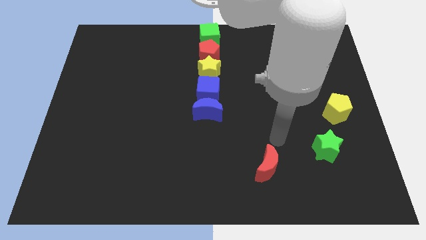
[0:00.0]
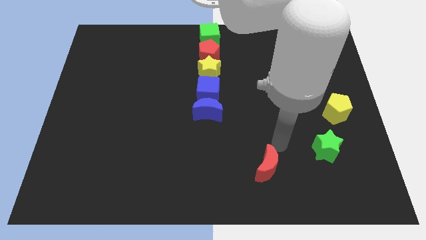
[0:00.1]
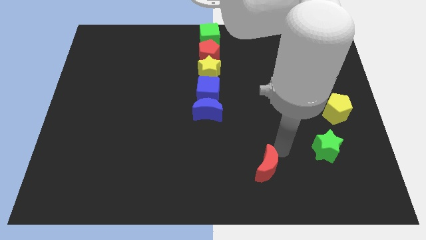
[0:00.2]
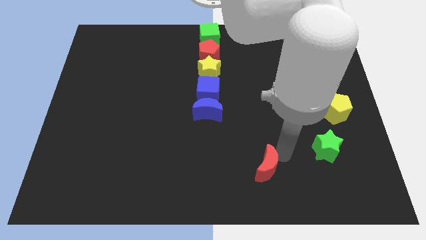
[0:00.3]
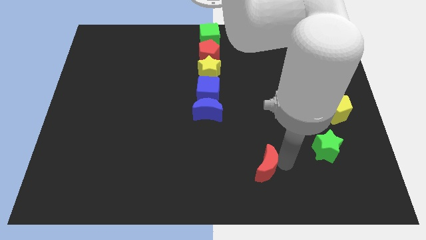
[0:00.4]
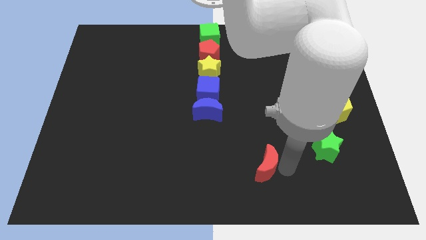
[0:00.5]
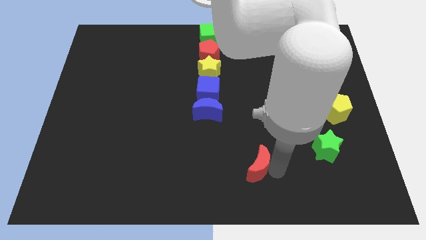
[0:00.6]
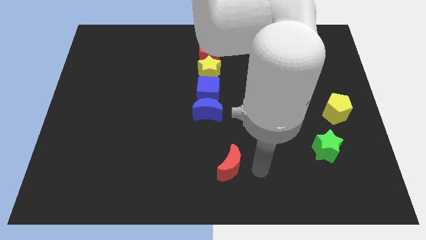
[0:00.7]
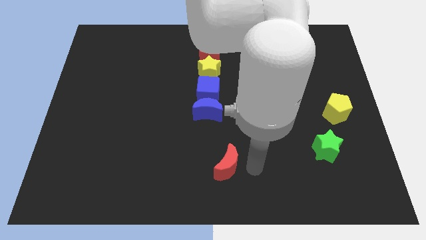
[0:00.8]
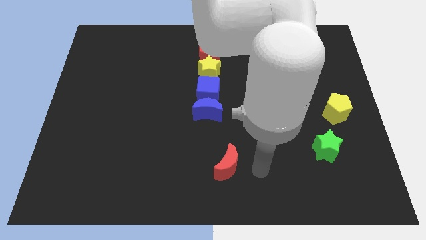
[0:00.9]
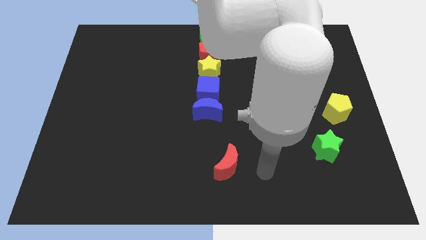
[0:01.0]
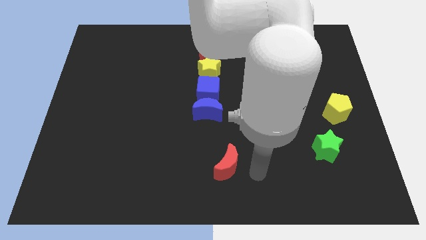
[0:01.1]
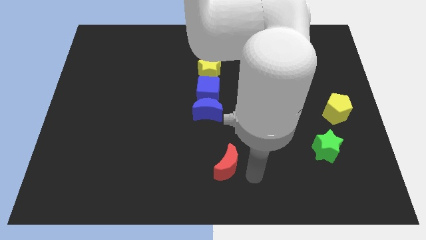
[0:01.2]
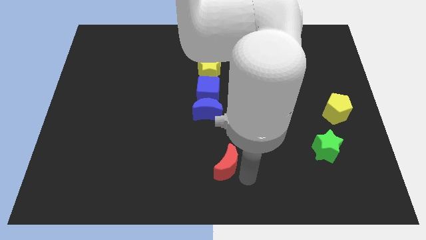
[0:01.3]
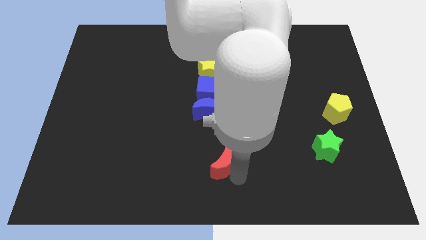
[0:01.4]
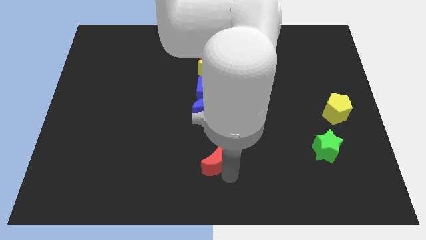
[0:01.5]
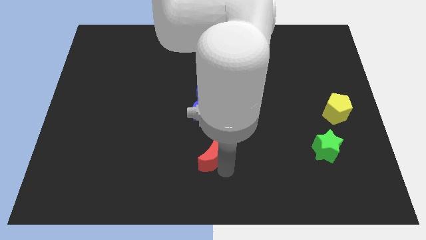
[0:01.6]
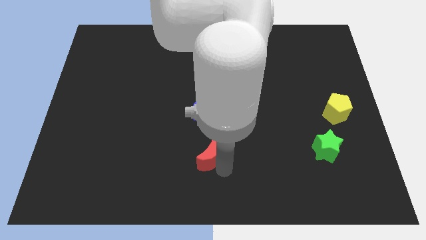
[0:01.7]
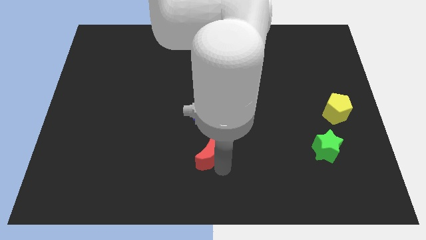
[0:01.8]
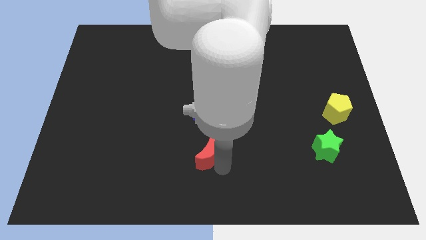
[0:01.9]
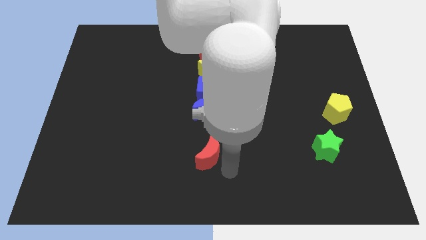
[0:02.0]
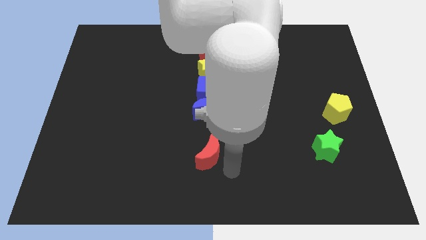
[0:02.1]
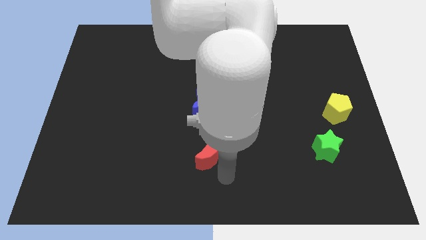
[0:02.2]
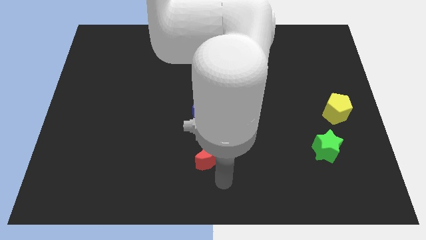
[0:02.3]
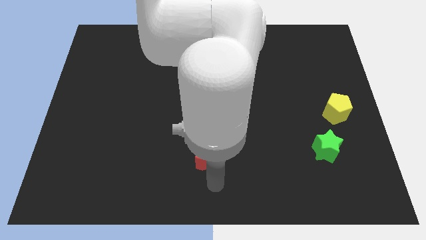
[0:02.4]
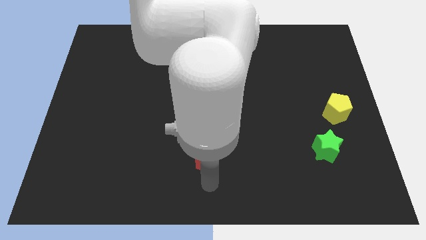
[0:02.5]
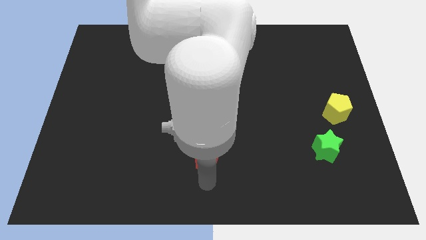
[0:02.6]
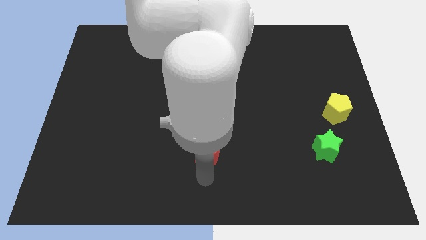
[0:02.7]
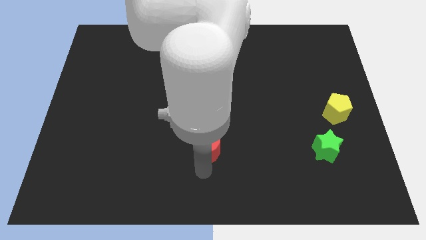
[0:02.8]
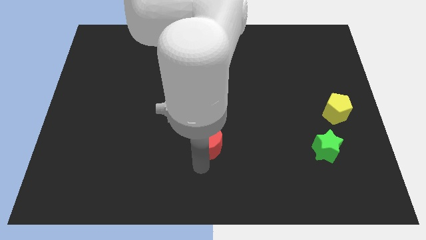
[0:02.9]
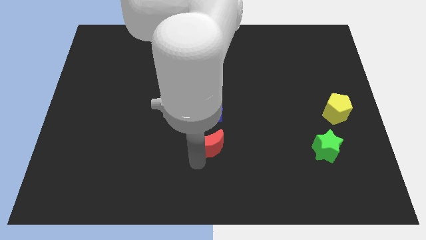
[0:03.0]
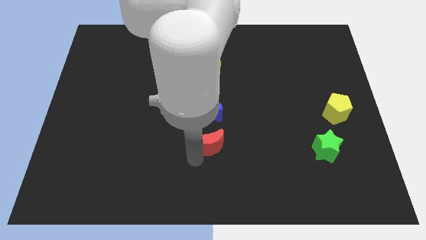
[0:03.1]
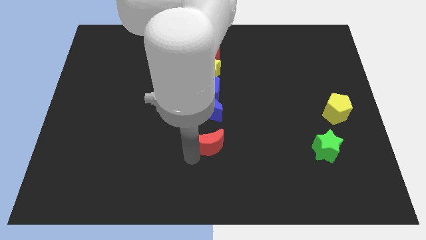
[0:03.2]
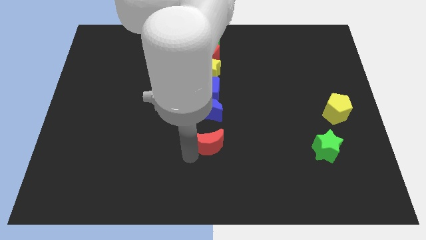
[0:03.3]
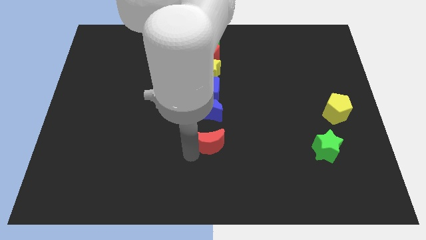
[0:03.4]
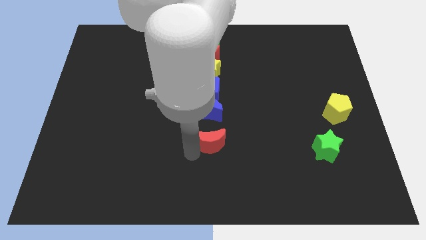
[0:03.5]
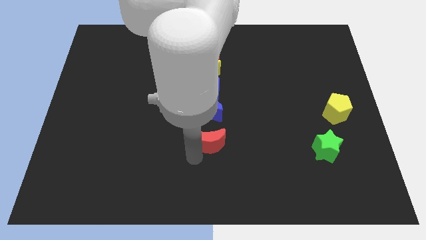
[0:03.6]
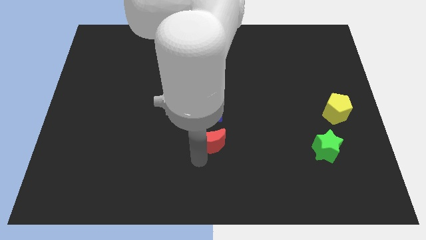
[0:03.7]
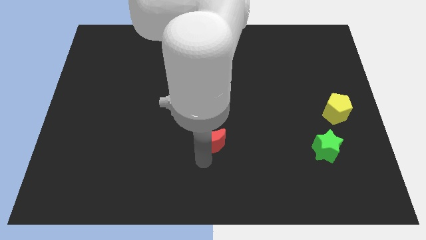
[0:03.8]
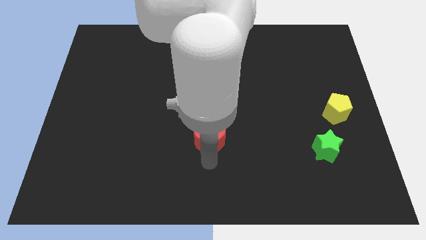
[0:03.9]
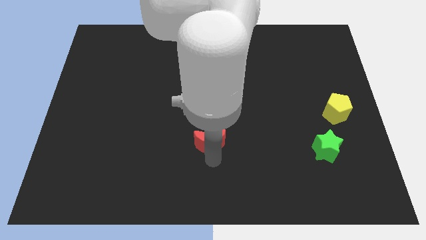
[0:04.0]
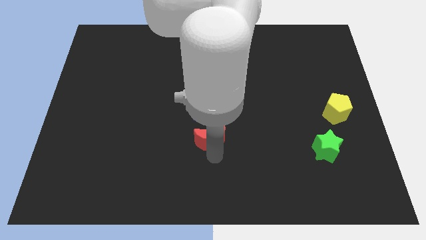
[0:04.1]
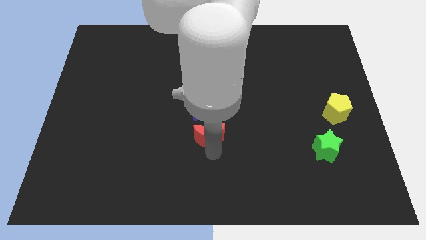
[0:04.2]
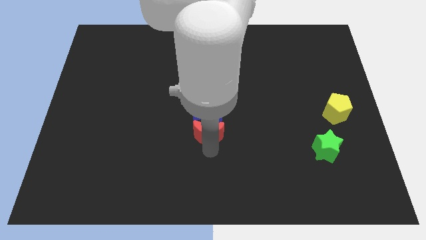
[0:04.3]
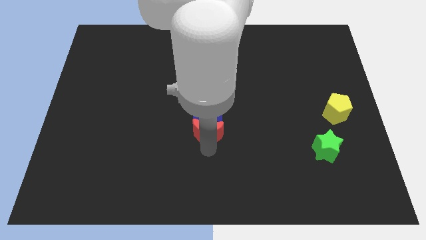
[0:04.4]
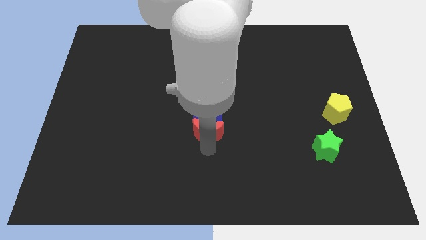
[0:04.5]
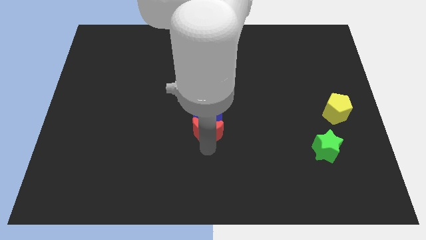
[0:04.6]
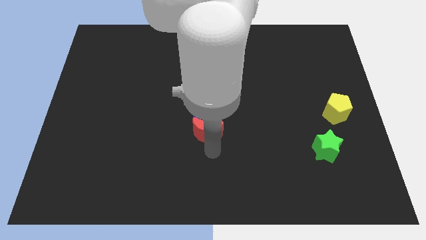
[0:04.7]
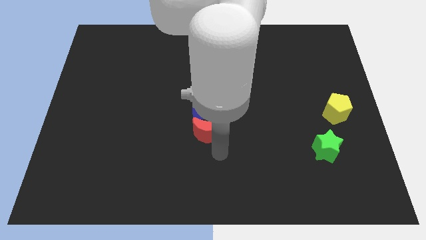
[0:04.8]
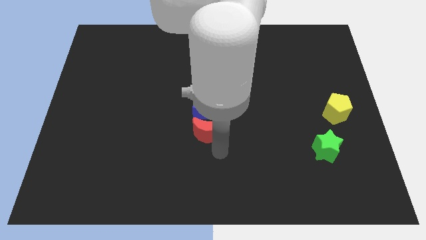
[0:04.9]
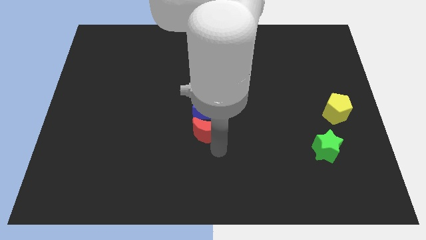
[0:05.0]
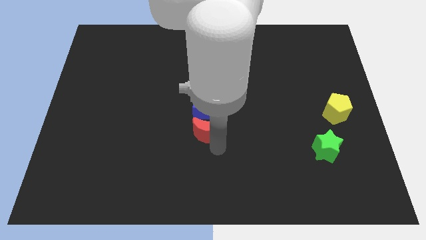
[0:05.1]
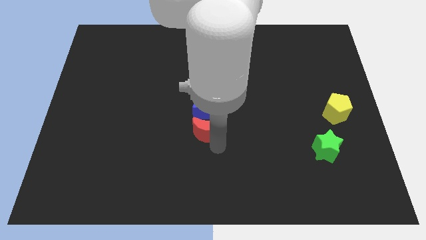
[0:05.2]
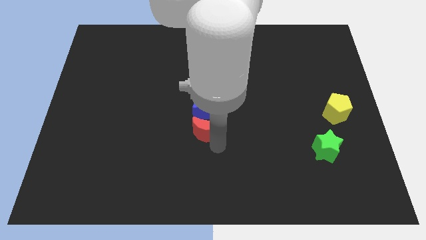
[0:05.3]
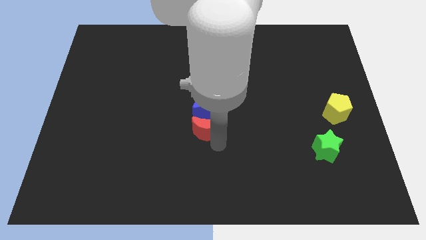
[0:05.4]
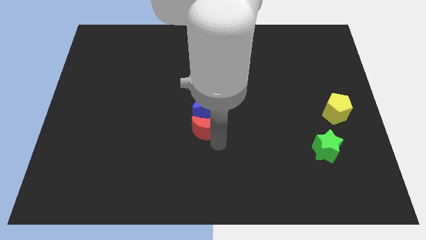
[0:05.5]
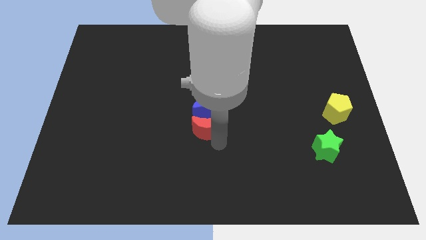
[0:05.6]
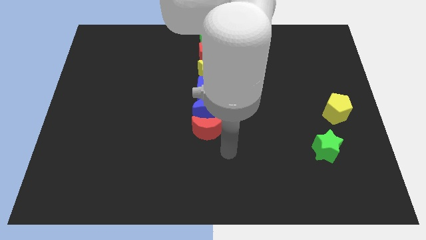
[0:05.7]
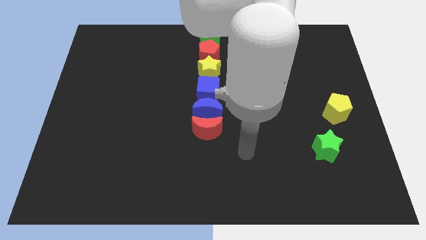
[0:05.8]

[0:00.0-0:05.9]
put the red crescent below the blue crescent

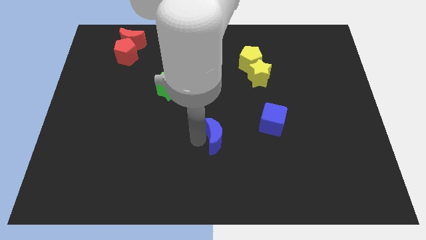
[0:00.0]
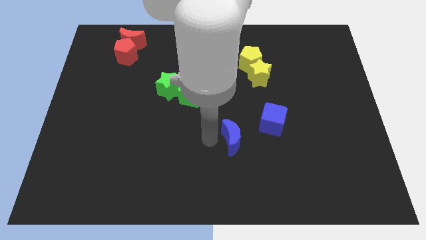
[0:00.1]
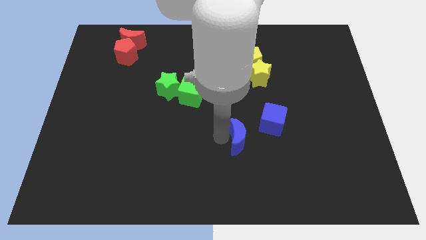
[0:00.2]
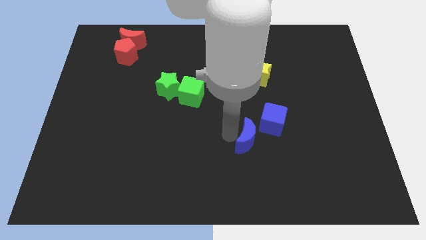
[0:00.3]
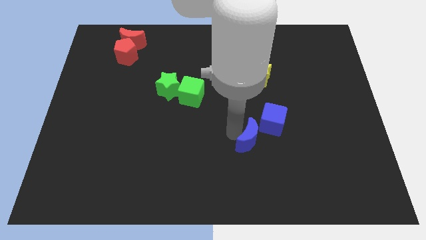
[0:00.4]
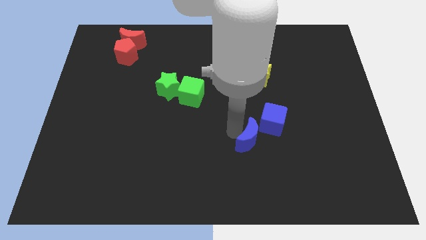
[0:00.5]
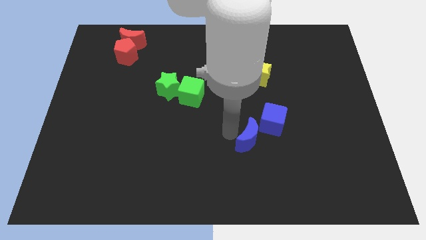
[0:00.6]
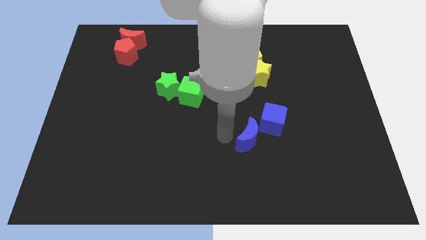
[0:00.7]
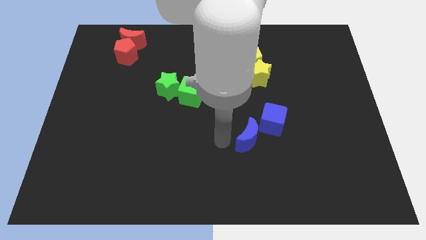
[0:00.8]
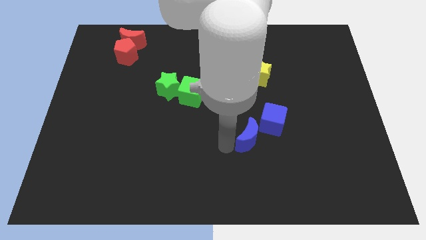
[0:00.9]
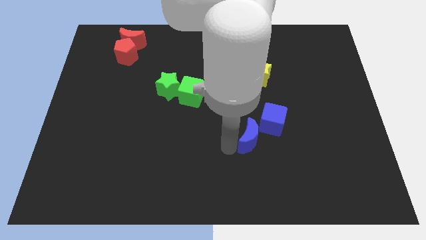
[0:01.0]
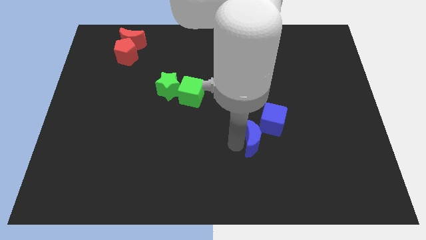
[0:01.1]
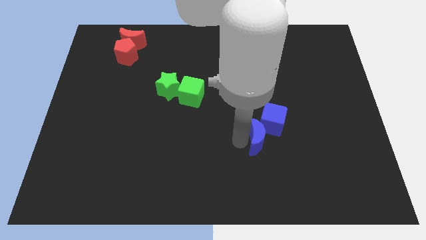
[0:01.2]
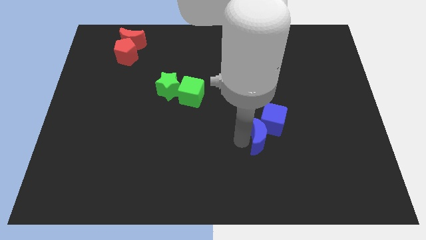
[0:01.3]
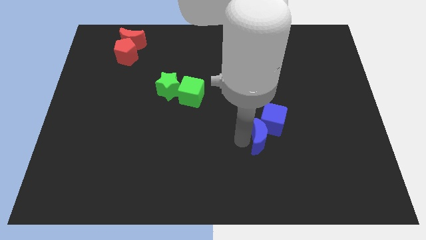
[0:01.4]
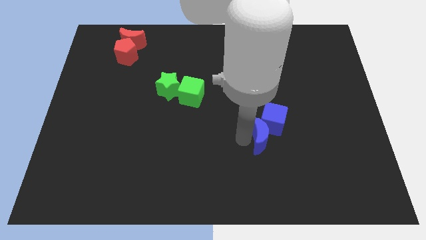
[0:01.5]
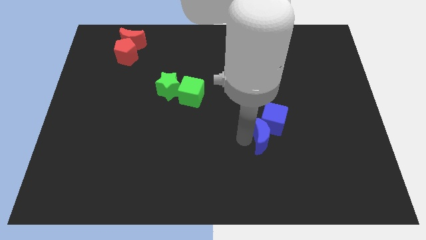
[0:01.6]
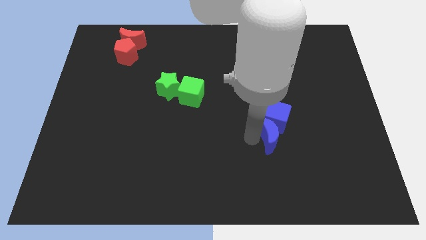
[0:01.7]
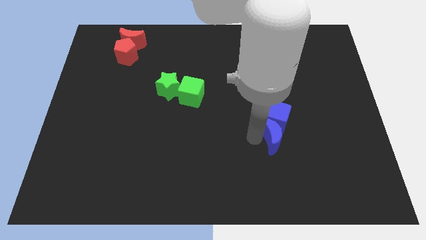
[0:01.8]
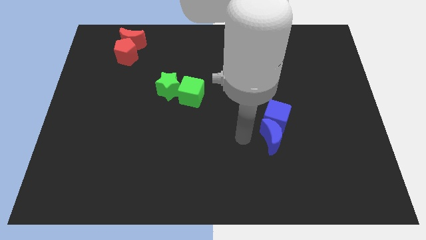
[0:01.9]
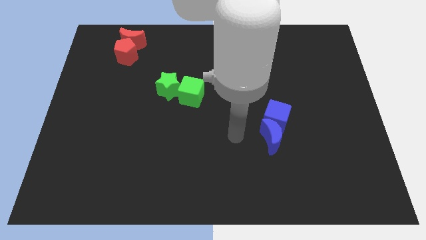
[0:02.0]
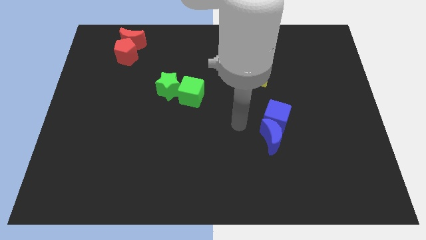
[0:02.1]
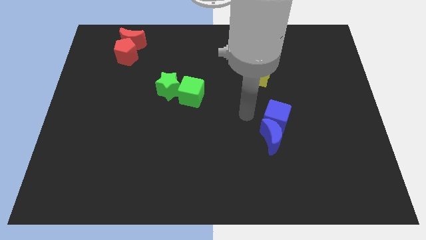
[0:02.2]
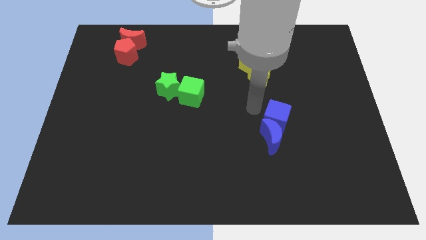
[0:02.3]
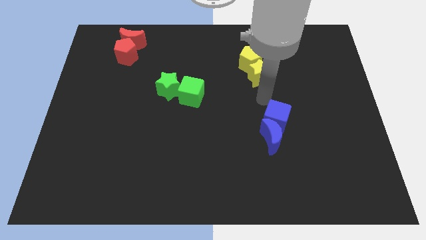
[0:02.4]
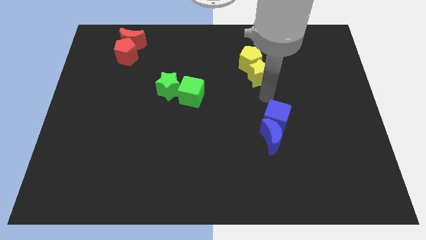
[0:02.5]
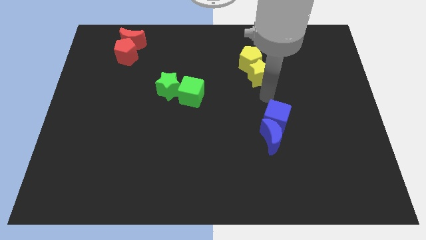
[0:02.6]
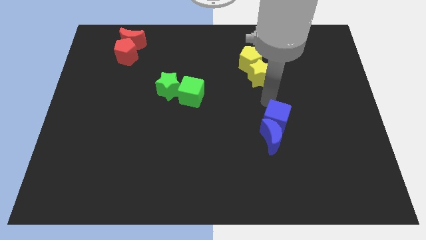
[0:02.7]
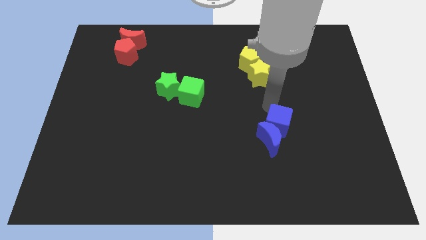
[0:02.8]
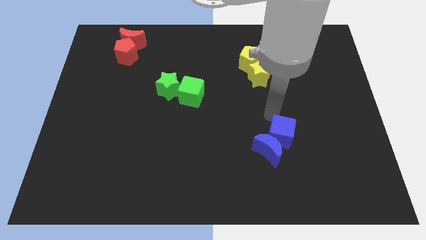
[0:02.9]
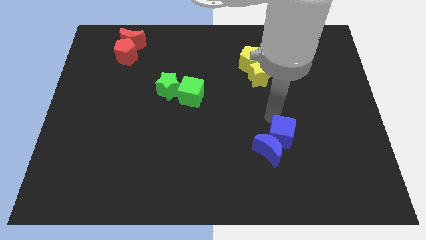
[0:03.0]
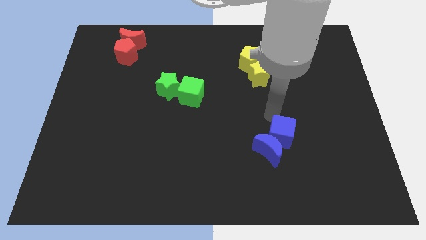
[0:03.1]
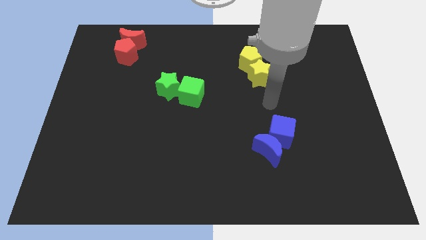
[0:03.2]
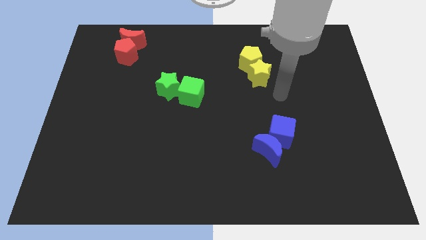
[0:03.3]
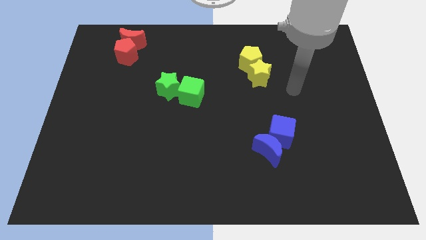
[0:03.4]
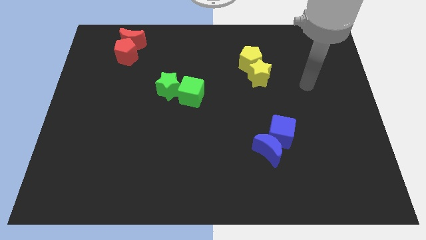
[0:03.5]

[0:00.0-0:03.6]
push blue moon blue cube towards bottom center
